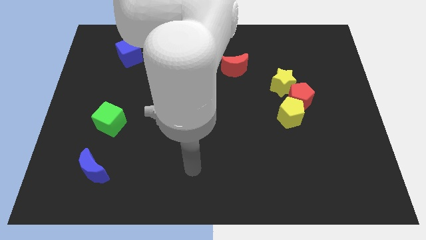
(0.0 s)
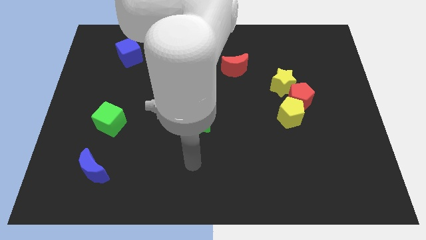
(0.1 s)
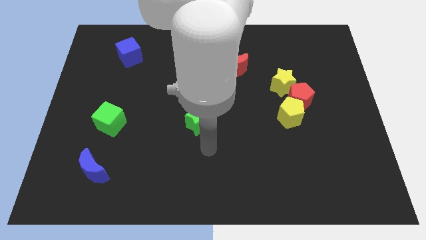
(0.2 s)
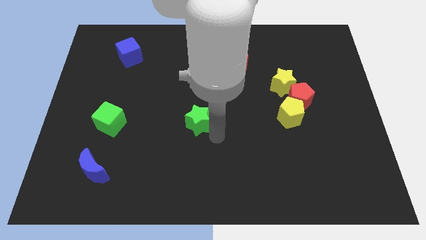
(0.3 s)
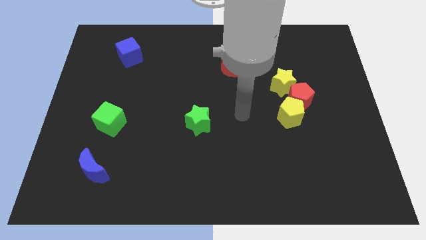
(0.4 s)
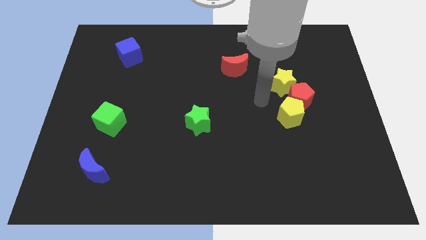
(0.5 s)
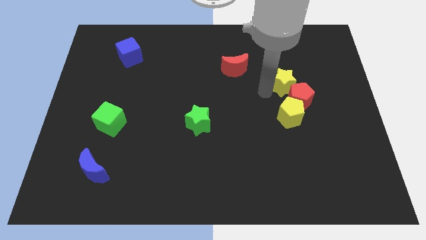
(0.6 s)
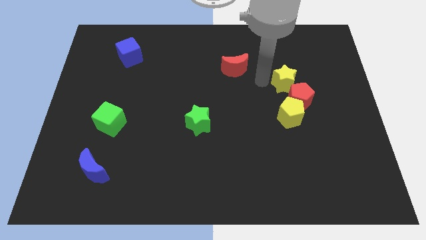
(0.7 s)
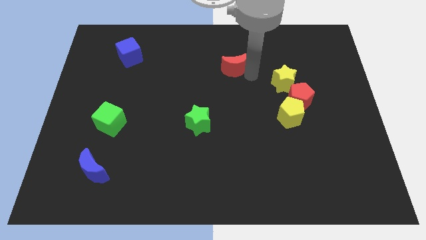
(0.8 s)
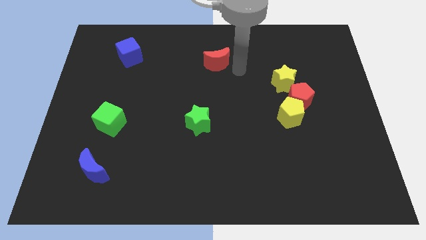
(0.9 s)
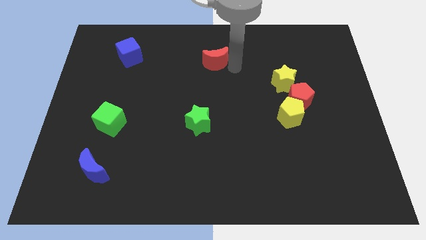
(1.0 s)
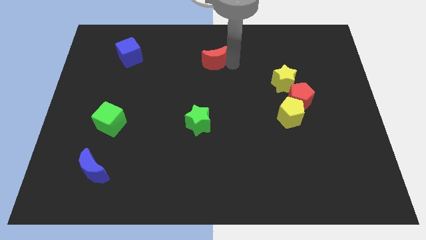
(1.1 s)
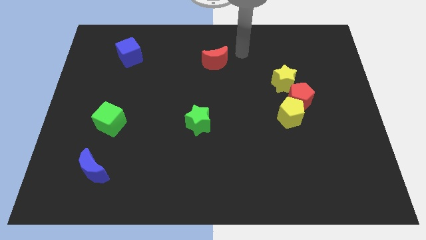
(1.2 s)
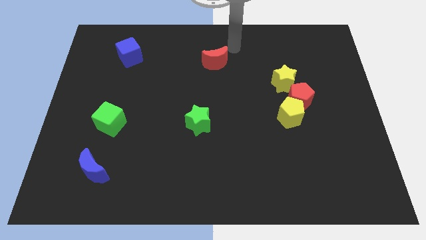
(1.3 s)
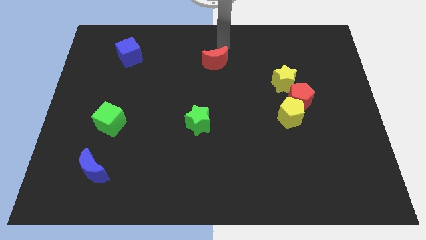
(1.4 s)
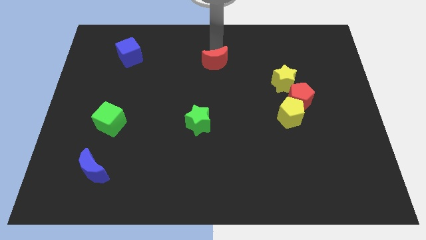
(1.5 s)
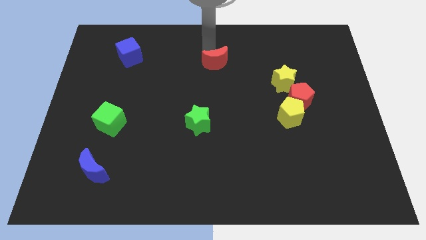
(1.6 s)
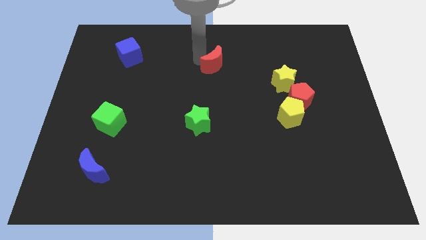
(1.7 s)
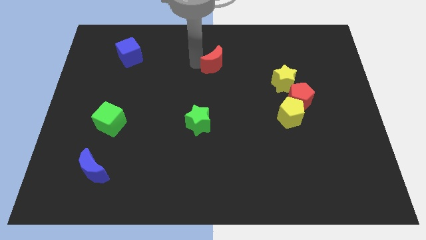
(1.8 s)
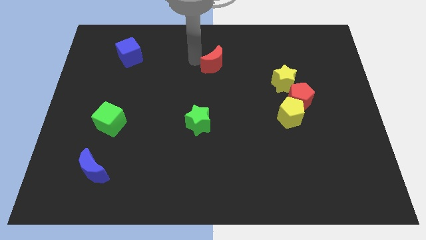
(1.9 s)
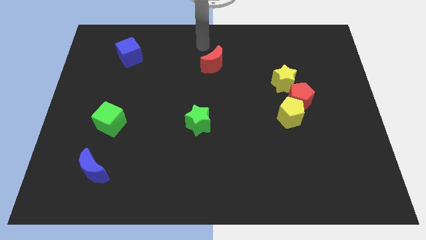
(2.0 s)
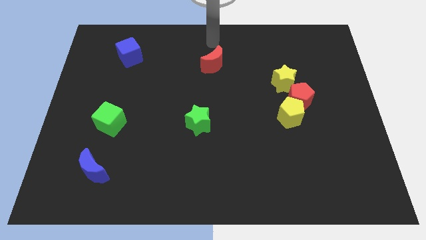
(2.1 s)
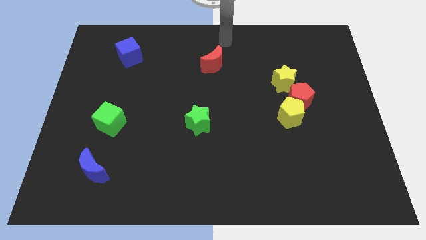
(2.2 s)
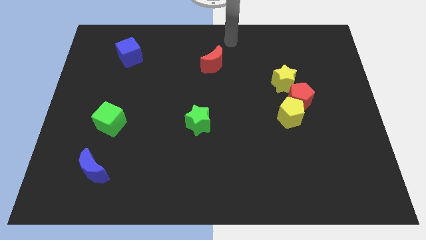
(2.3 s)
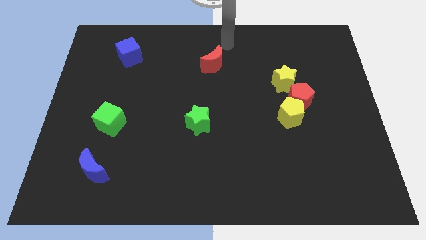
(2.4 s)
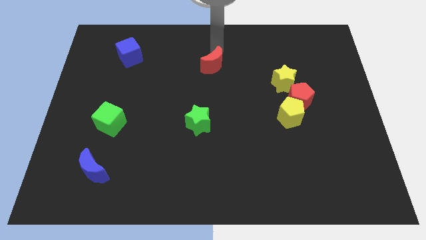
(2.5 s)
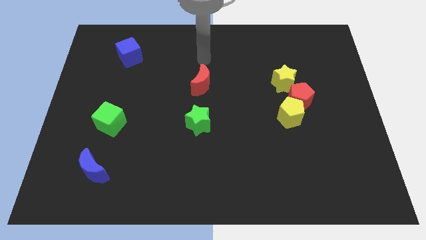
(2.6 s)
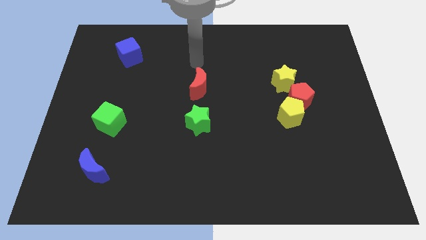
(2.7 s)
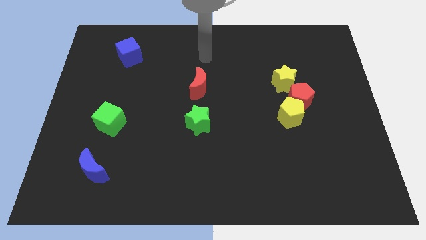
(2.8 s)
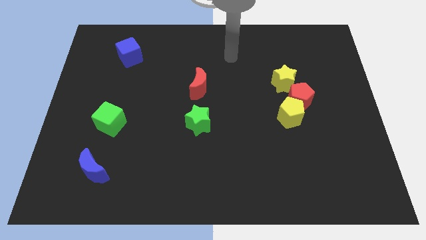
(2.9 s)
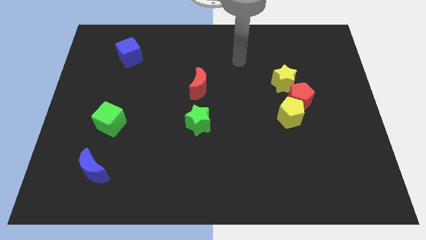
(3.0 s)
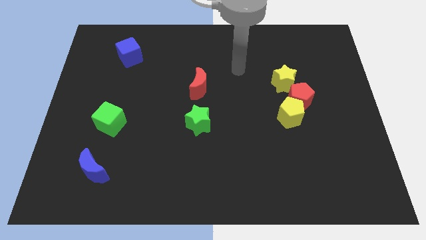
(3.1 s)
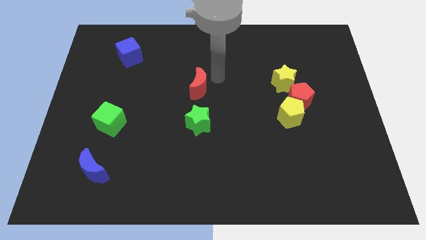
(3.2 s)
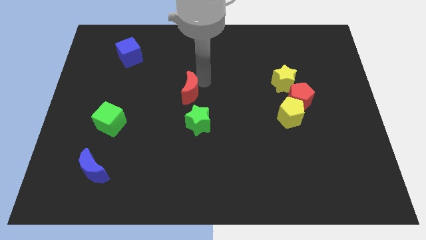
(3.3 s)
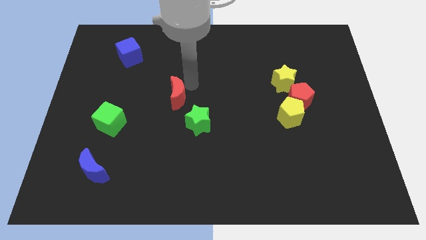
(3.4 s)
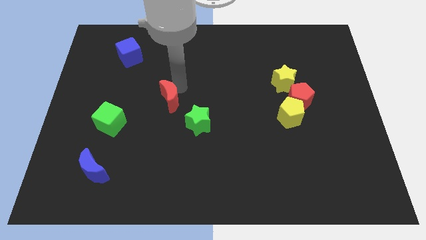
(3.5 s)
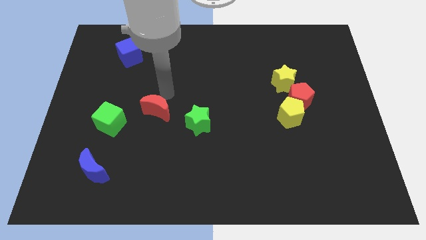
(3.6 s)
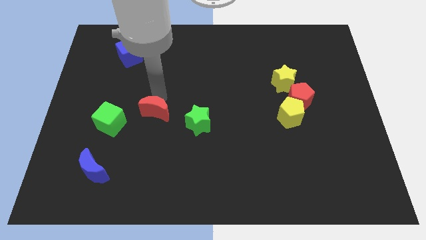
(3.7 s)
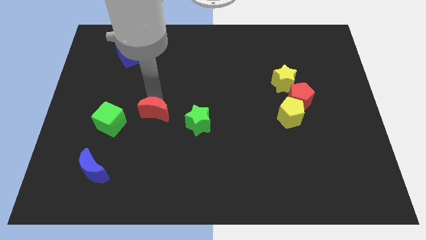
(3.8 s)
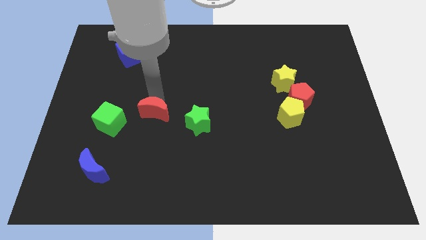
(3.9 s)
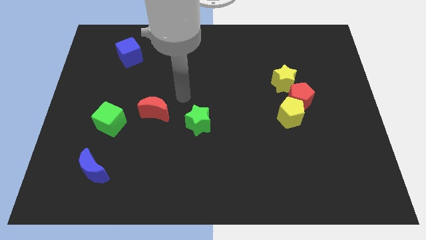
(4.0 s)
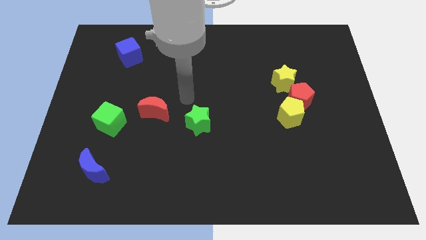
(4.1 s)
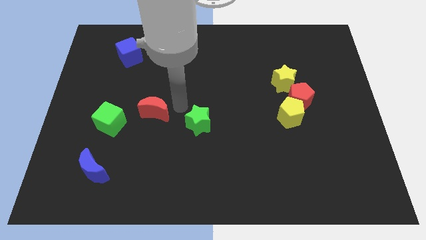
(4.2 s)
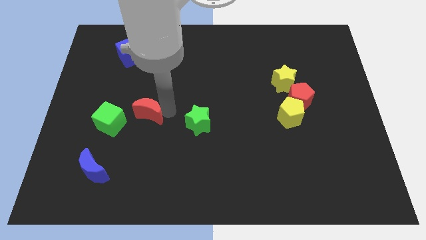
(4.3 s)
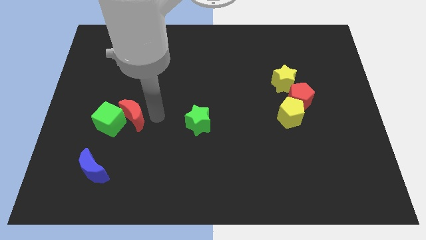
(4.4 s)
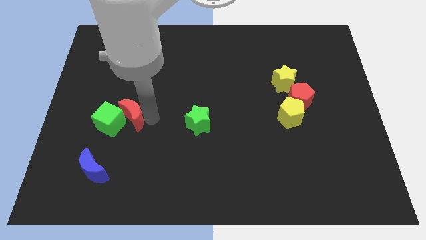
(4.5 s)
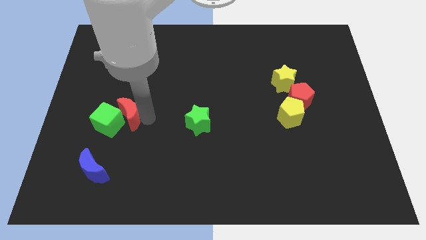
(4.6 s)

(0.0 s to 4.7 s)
push the red moon to the green cube

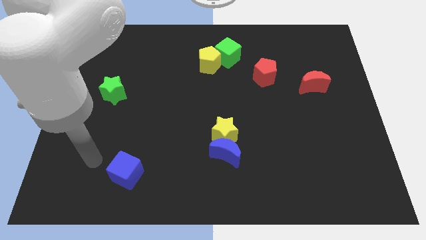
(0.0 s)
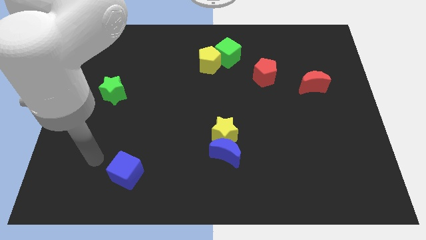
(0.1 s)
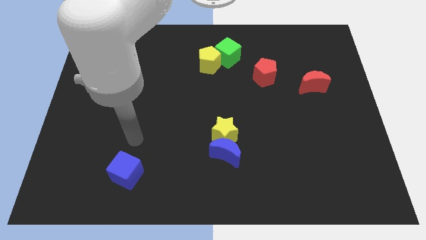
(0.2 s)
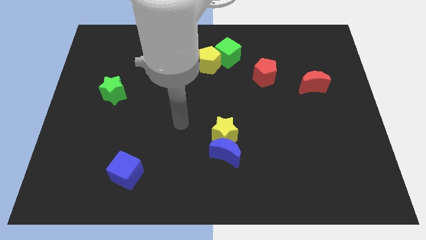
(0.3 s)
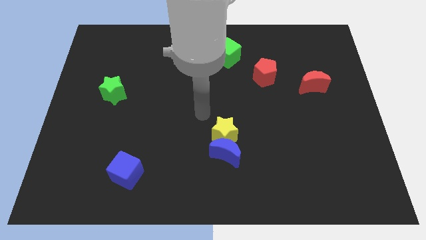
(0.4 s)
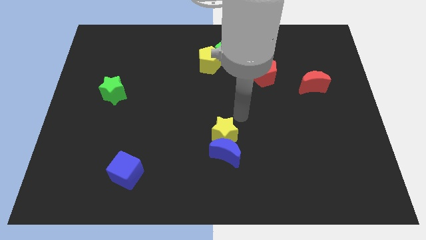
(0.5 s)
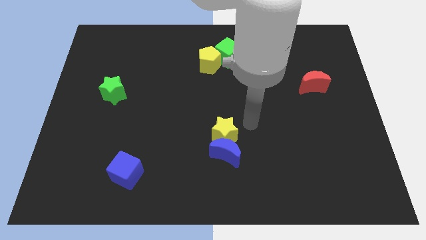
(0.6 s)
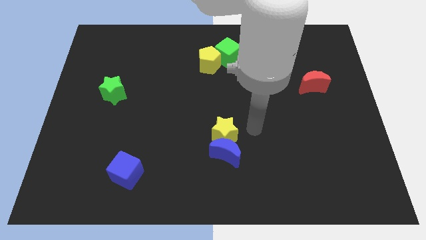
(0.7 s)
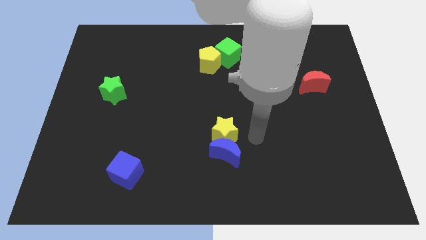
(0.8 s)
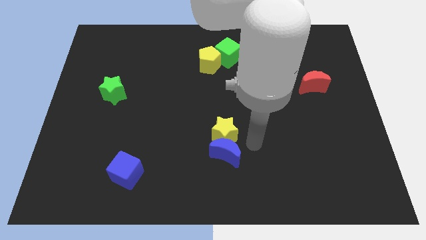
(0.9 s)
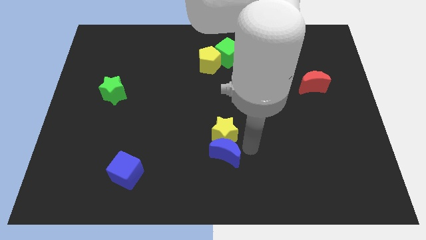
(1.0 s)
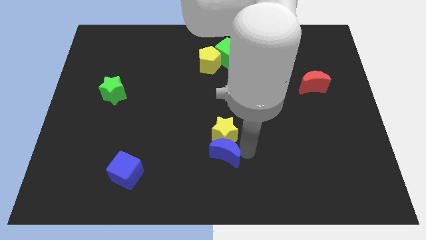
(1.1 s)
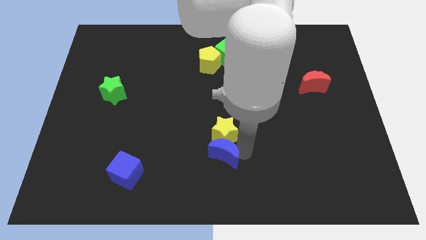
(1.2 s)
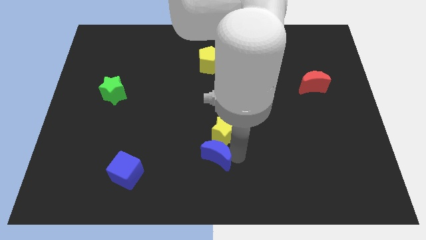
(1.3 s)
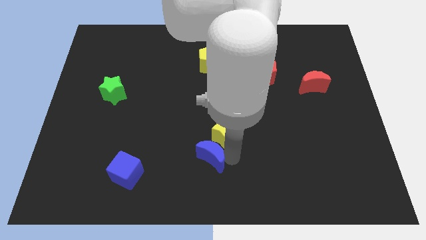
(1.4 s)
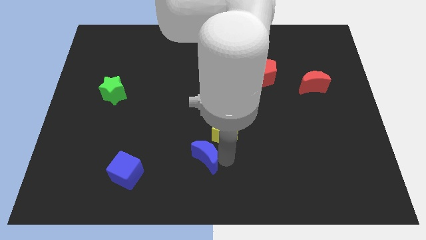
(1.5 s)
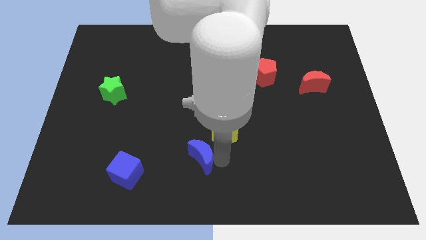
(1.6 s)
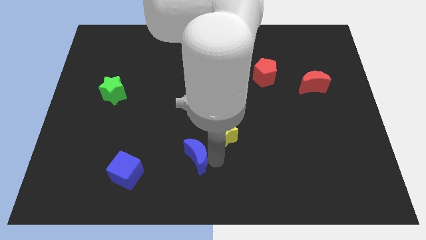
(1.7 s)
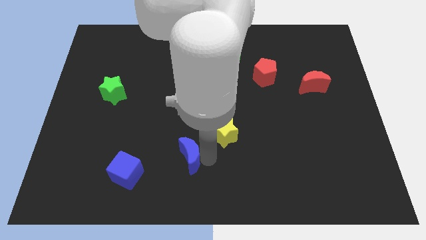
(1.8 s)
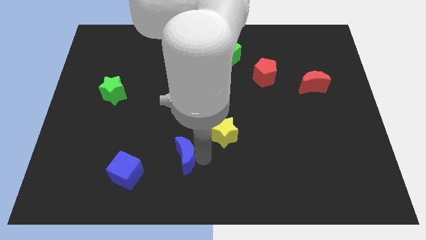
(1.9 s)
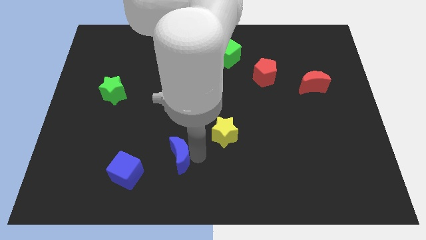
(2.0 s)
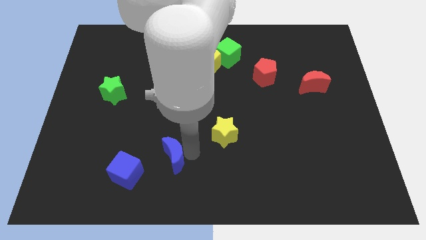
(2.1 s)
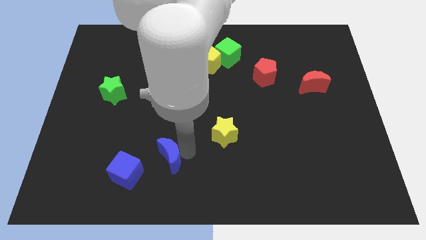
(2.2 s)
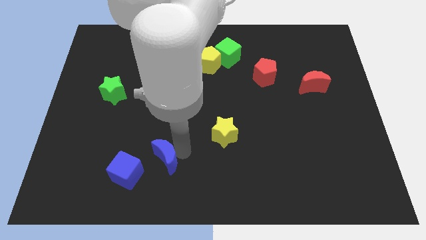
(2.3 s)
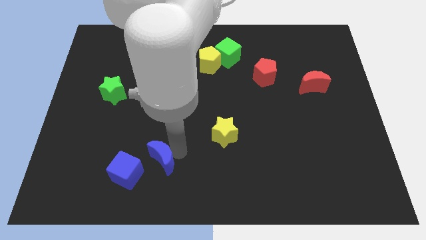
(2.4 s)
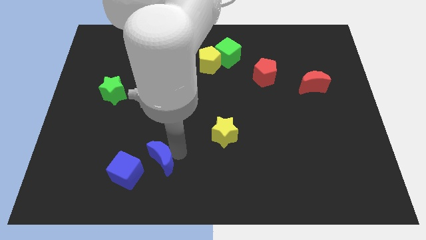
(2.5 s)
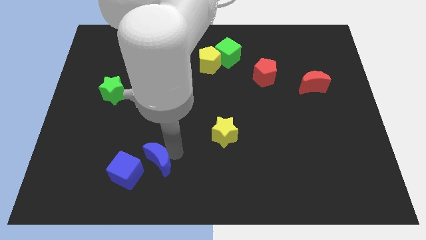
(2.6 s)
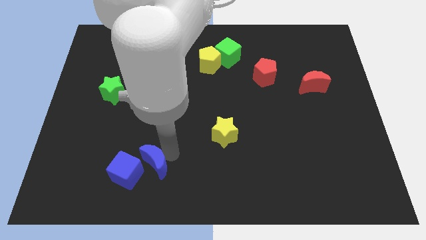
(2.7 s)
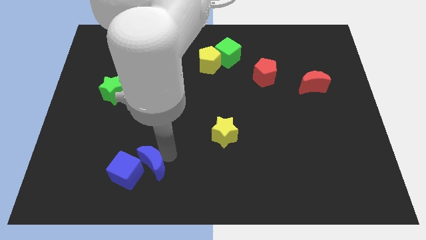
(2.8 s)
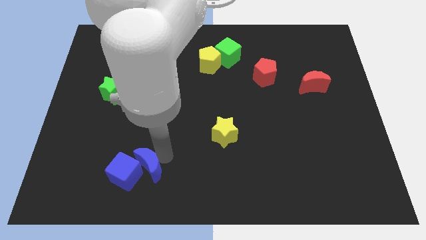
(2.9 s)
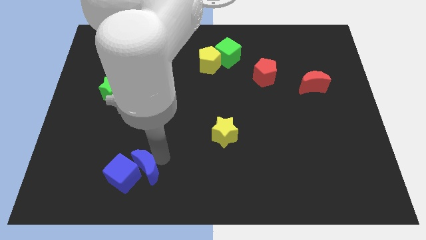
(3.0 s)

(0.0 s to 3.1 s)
slide the blue moon close to the blue cube

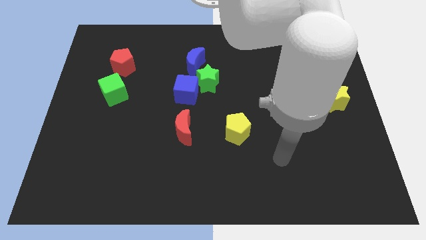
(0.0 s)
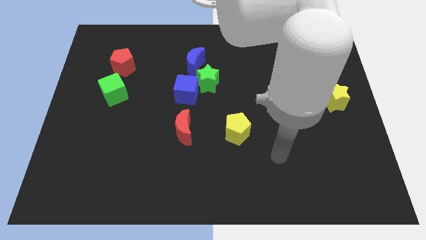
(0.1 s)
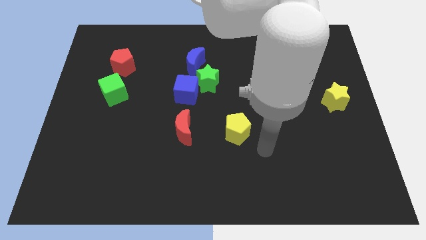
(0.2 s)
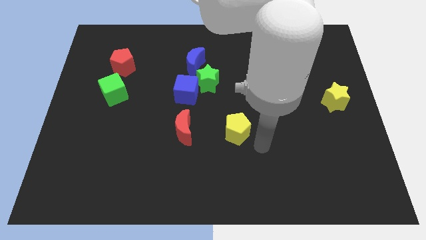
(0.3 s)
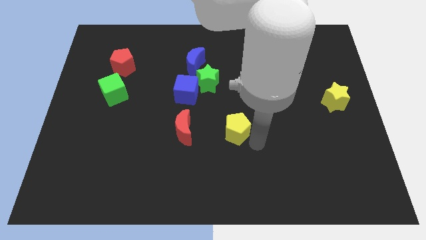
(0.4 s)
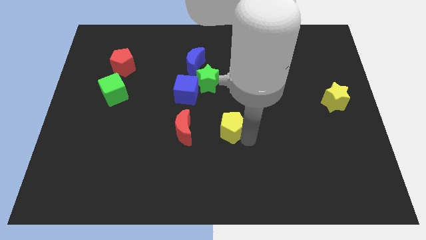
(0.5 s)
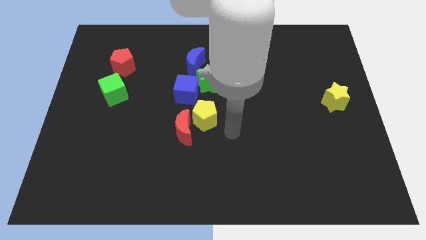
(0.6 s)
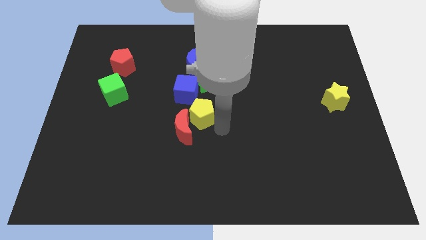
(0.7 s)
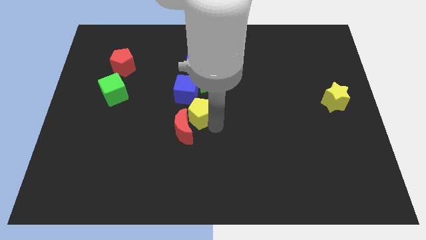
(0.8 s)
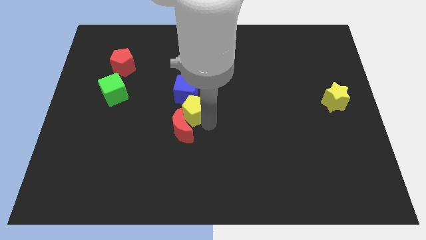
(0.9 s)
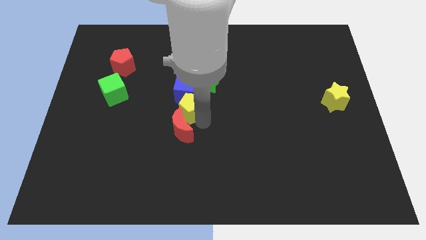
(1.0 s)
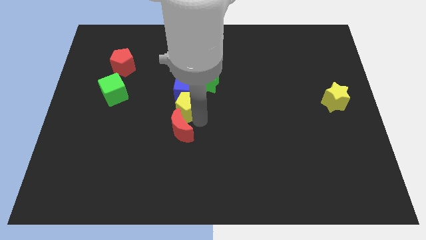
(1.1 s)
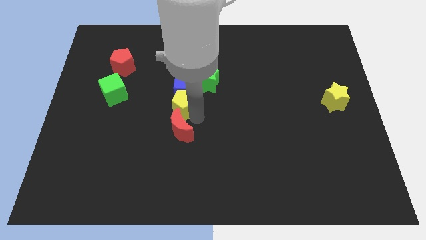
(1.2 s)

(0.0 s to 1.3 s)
slide the yellow pentagon close to the blue cube
